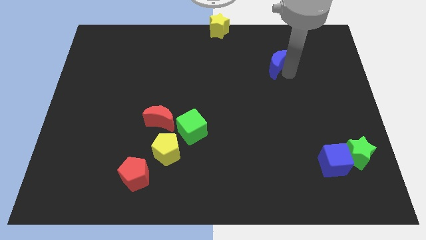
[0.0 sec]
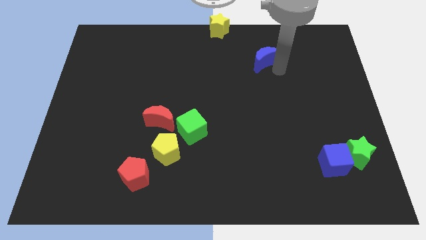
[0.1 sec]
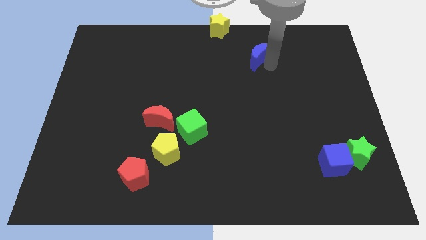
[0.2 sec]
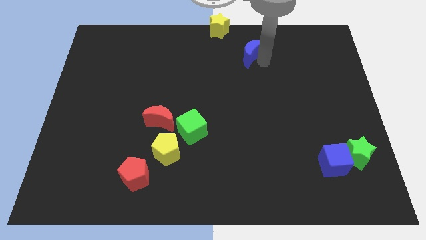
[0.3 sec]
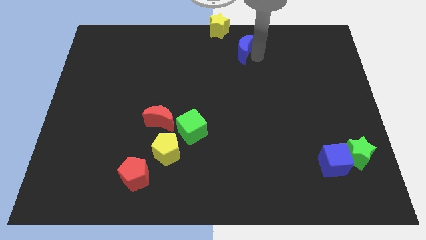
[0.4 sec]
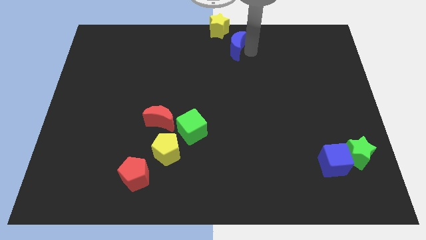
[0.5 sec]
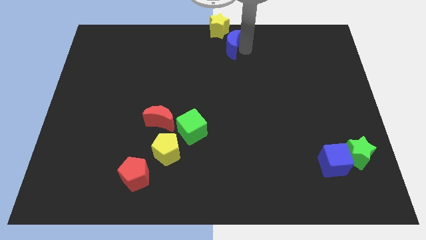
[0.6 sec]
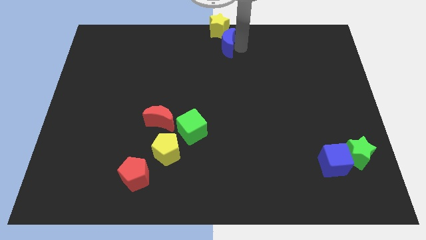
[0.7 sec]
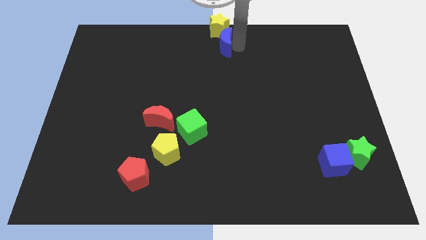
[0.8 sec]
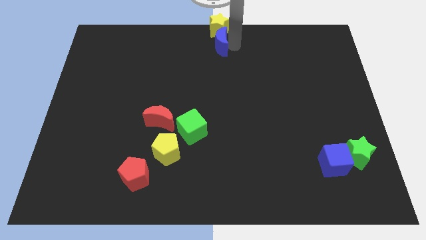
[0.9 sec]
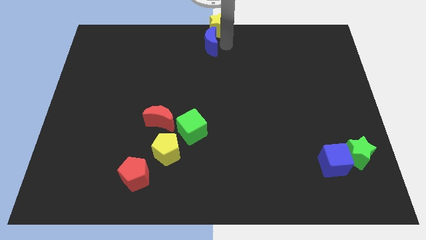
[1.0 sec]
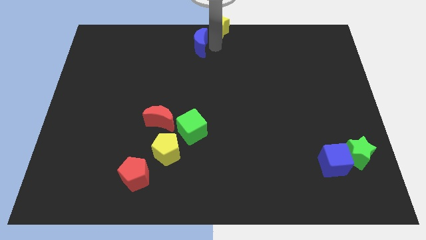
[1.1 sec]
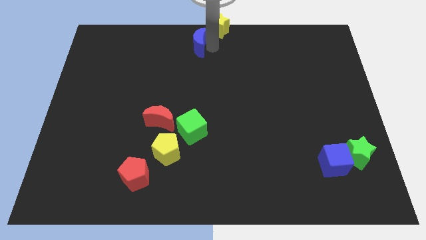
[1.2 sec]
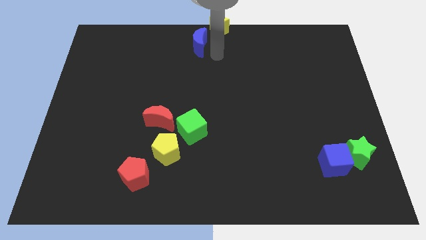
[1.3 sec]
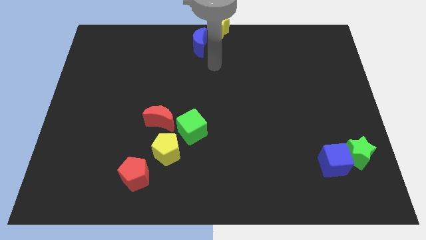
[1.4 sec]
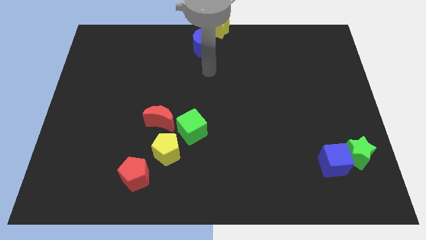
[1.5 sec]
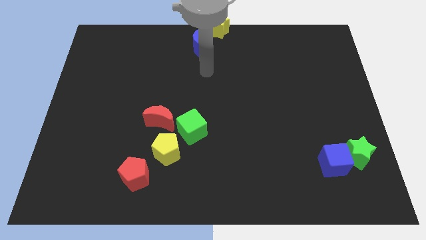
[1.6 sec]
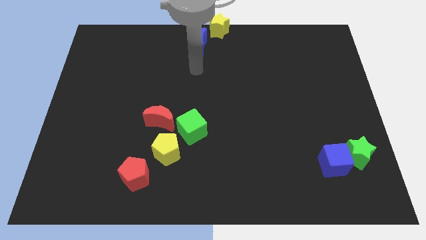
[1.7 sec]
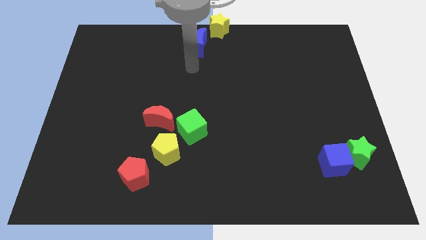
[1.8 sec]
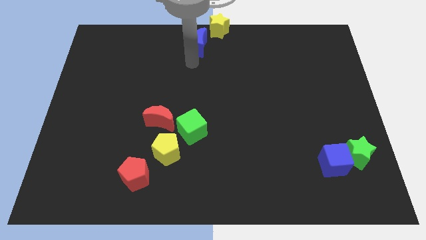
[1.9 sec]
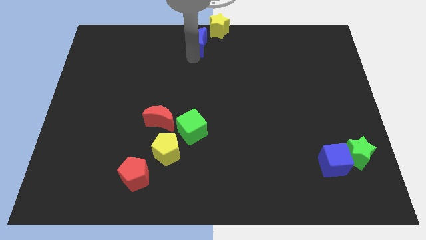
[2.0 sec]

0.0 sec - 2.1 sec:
move blue moon to the bottom left of yellow star

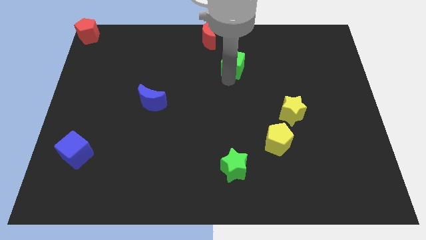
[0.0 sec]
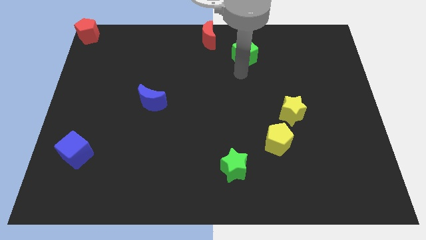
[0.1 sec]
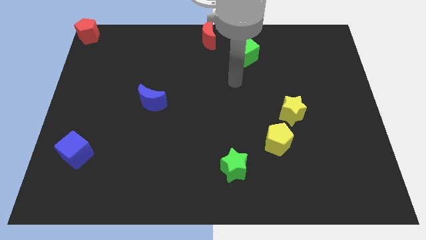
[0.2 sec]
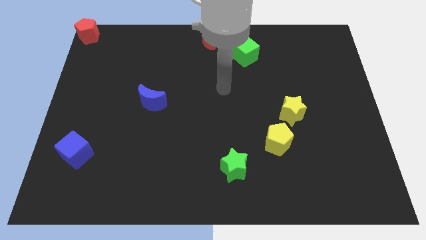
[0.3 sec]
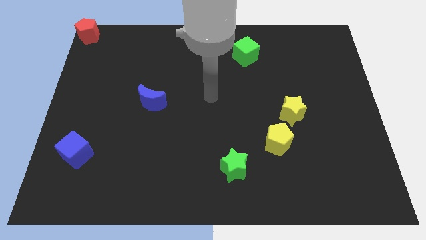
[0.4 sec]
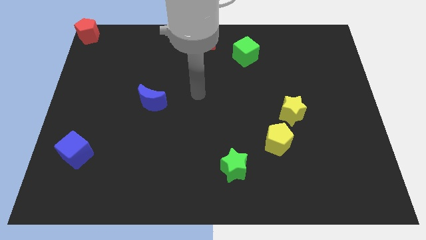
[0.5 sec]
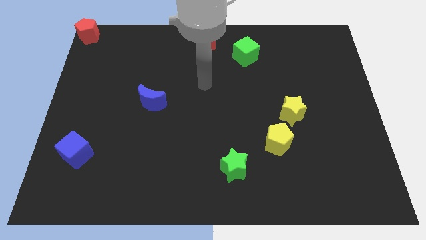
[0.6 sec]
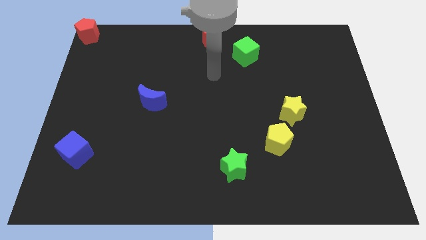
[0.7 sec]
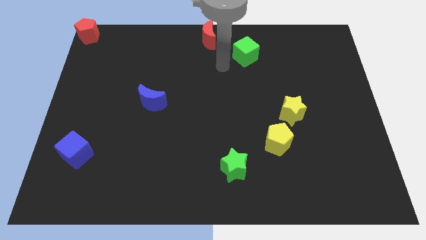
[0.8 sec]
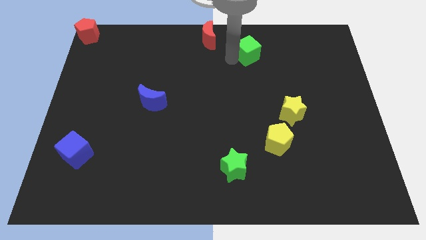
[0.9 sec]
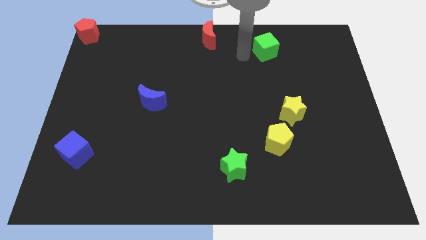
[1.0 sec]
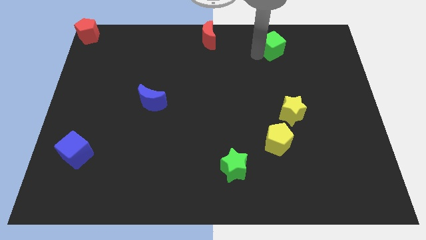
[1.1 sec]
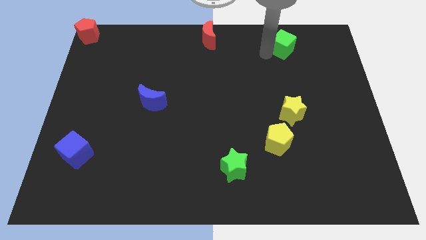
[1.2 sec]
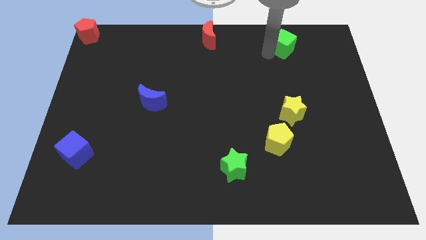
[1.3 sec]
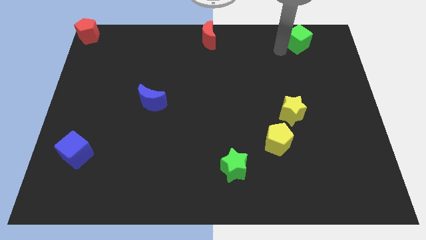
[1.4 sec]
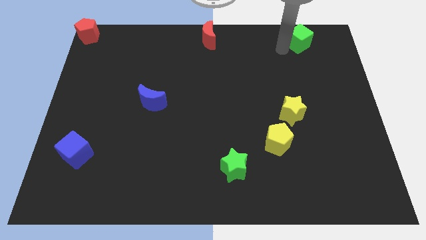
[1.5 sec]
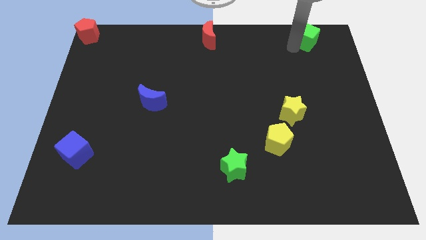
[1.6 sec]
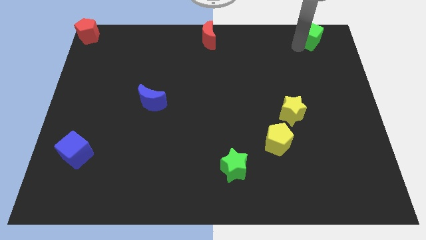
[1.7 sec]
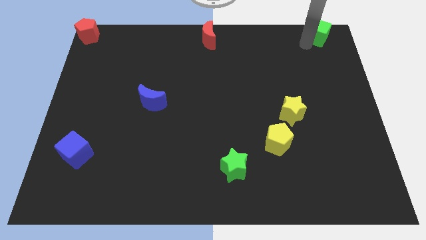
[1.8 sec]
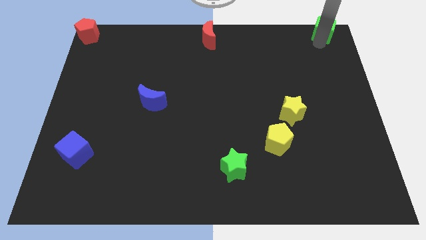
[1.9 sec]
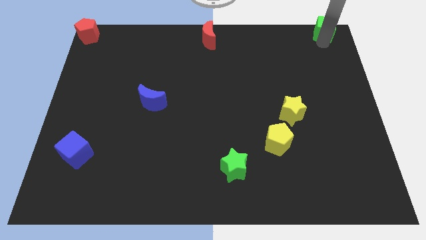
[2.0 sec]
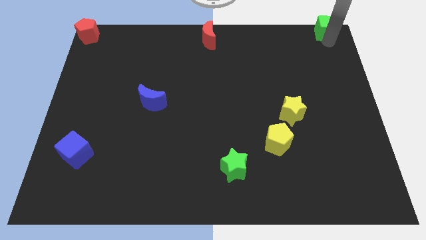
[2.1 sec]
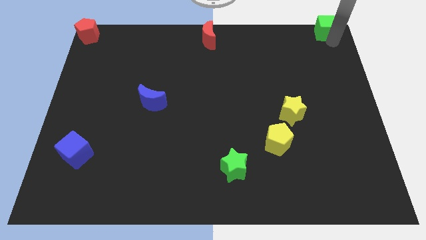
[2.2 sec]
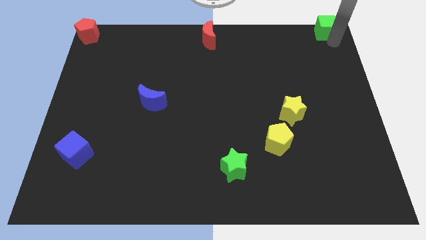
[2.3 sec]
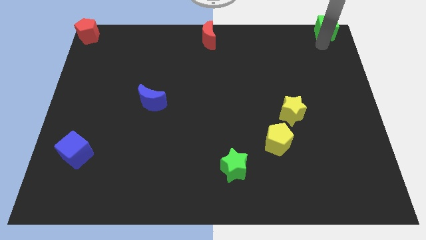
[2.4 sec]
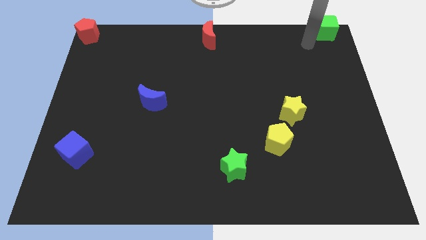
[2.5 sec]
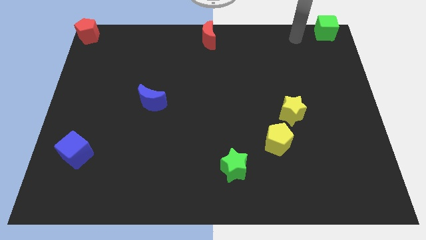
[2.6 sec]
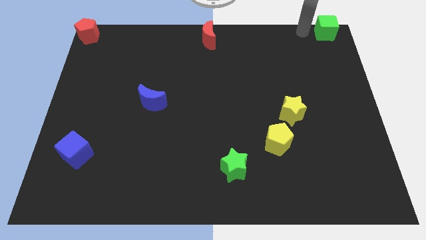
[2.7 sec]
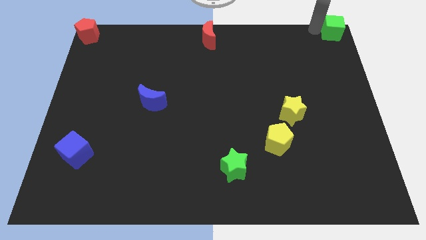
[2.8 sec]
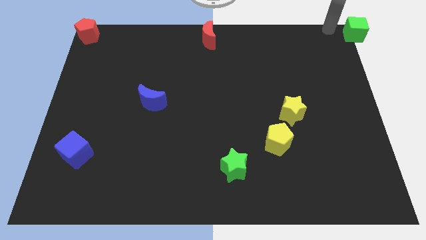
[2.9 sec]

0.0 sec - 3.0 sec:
push the green cube to the top right corner of the board

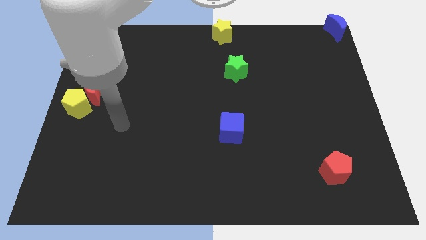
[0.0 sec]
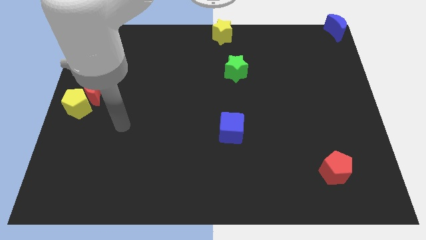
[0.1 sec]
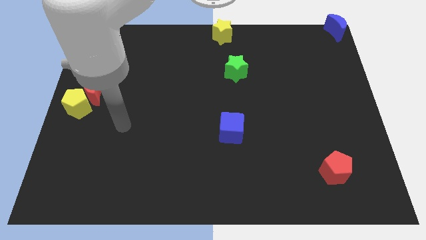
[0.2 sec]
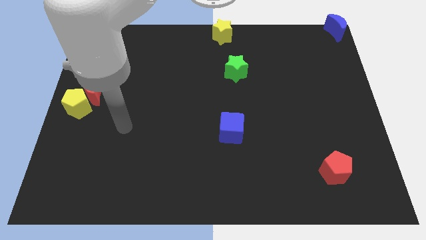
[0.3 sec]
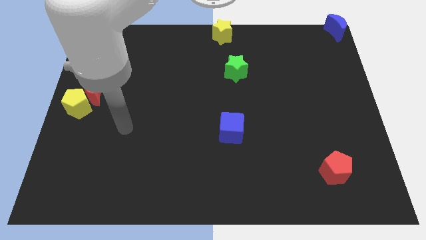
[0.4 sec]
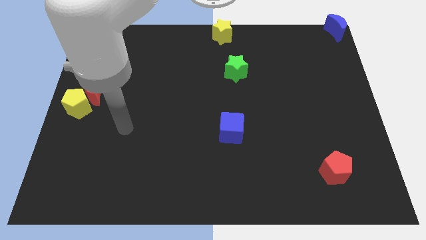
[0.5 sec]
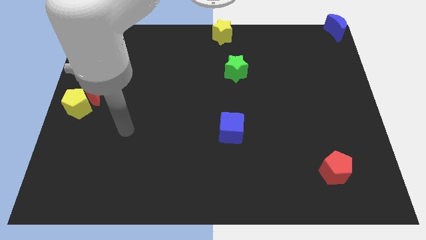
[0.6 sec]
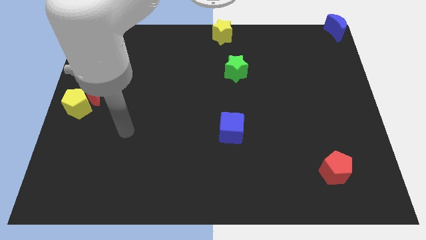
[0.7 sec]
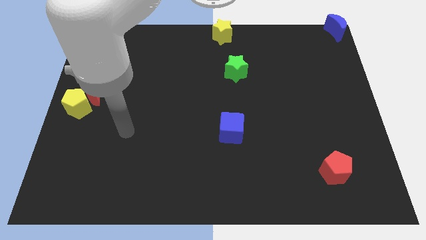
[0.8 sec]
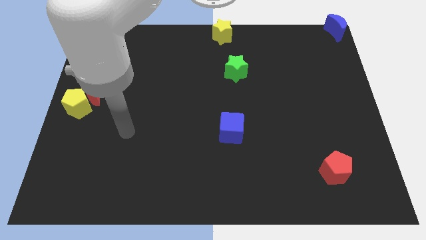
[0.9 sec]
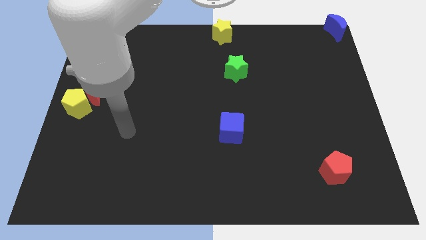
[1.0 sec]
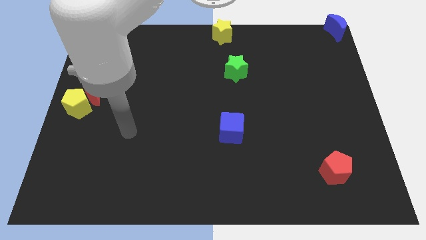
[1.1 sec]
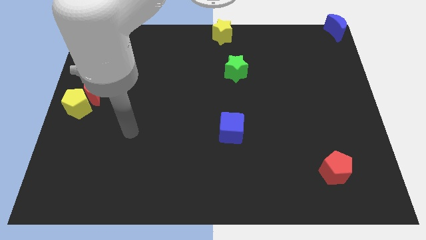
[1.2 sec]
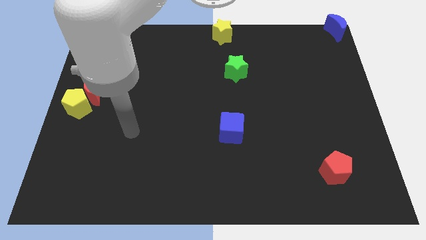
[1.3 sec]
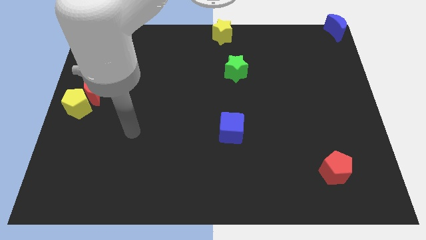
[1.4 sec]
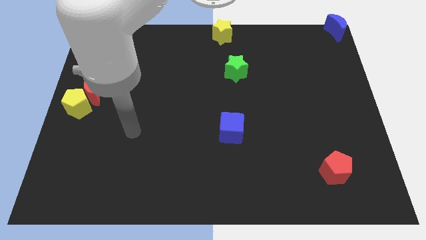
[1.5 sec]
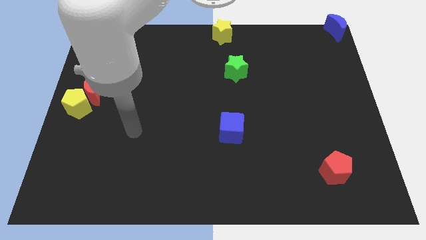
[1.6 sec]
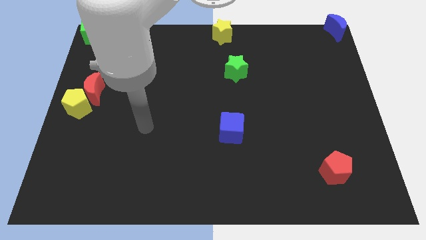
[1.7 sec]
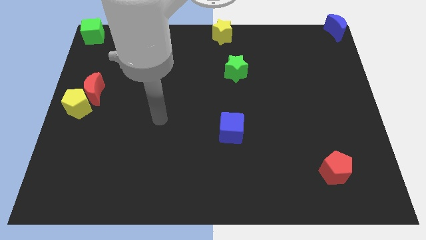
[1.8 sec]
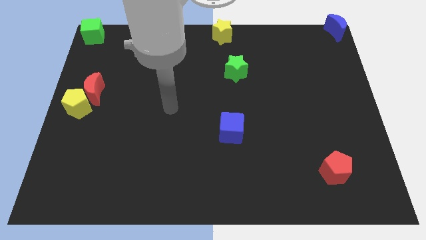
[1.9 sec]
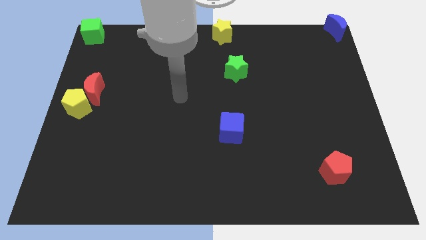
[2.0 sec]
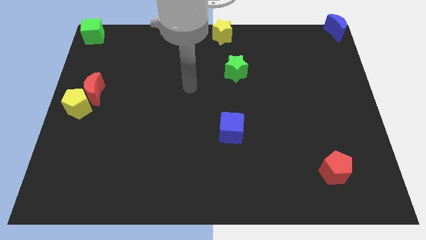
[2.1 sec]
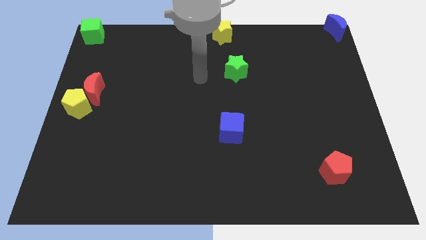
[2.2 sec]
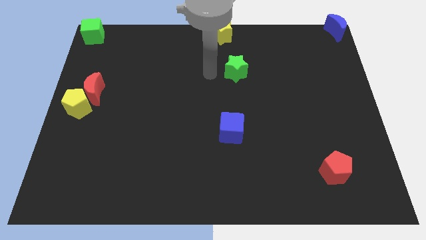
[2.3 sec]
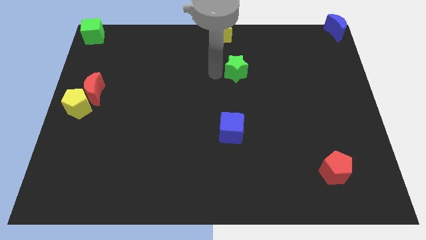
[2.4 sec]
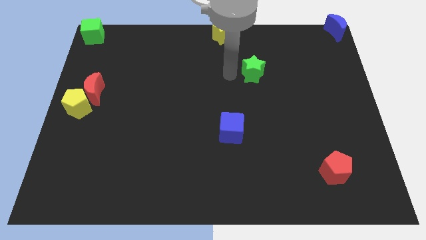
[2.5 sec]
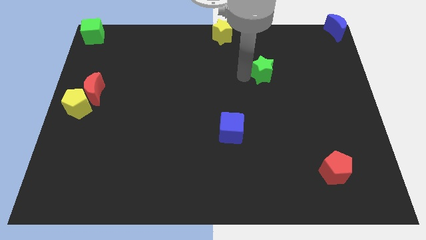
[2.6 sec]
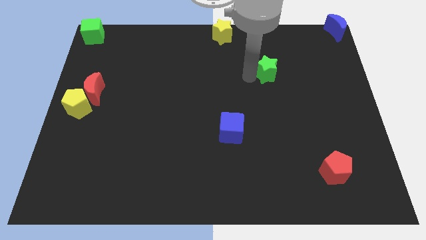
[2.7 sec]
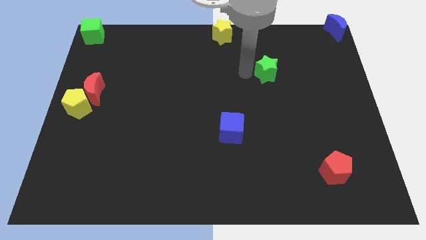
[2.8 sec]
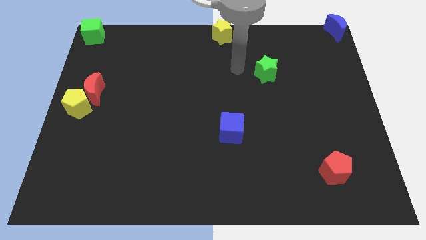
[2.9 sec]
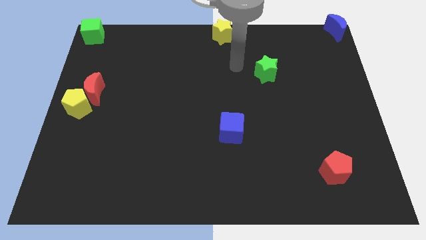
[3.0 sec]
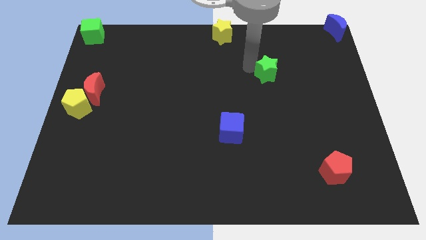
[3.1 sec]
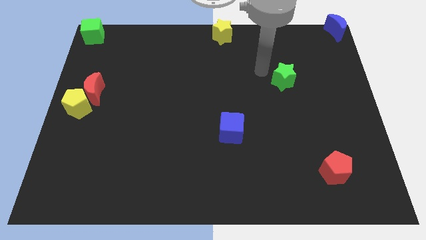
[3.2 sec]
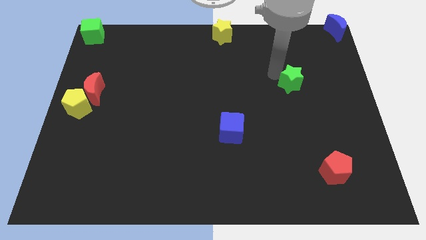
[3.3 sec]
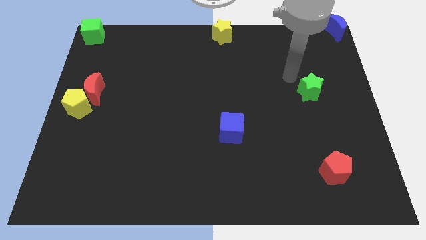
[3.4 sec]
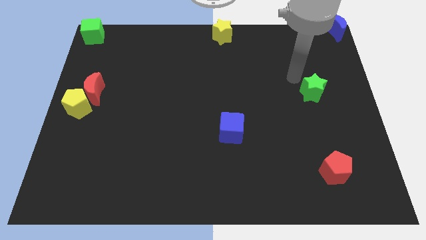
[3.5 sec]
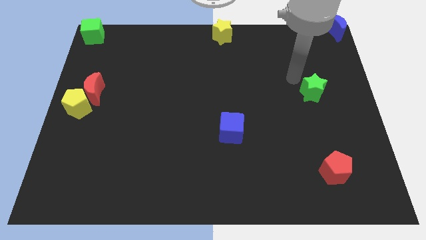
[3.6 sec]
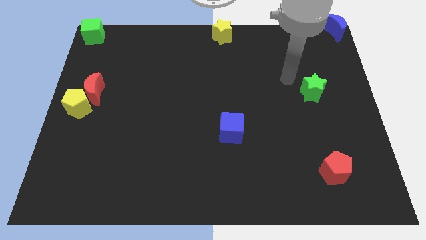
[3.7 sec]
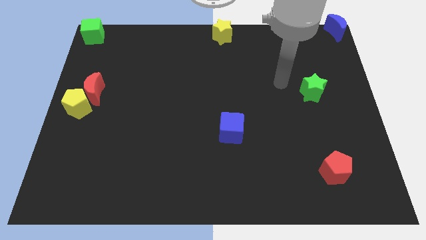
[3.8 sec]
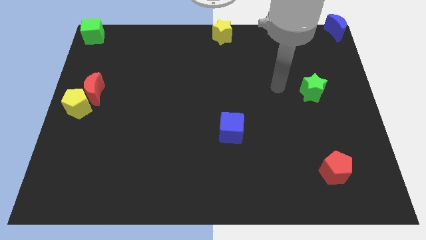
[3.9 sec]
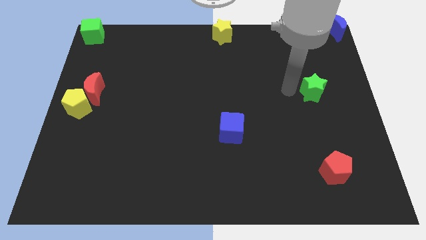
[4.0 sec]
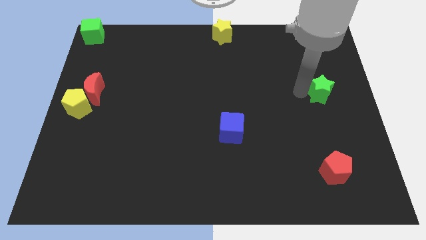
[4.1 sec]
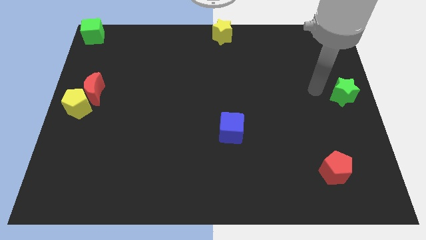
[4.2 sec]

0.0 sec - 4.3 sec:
move the green star to the center right of the board
